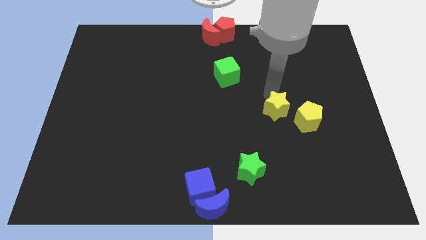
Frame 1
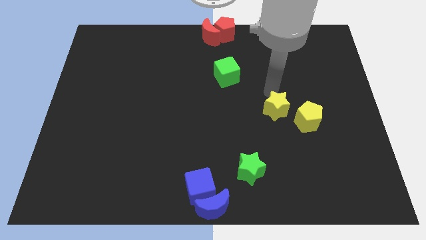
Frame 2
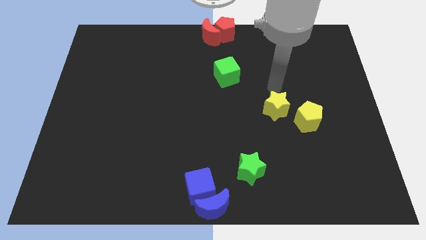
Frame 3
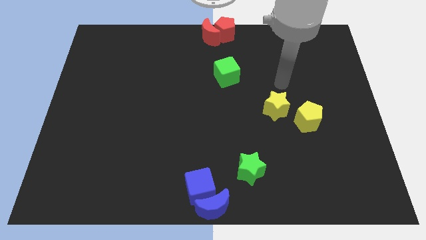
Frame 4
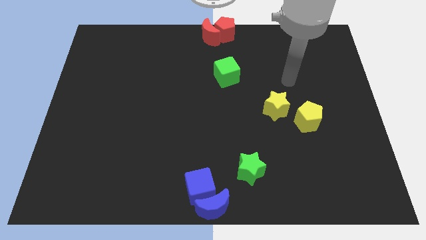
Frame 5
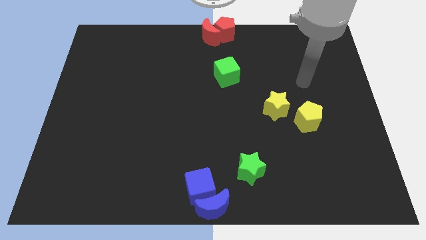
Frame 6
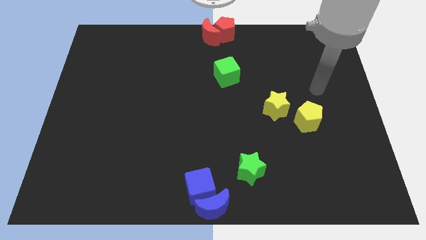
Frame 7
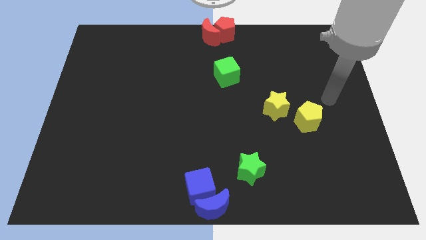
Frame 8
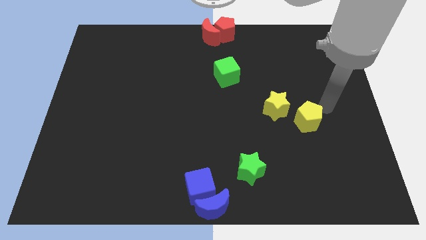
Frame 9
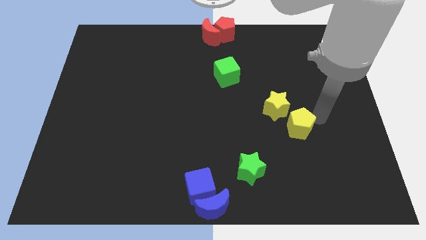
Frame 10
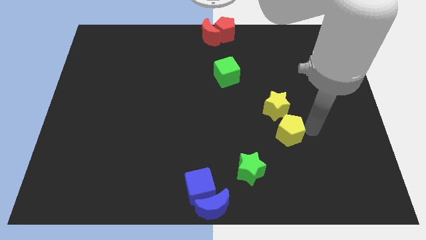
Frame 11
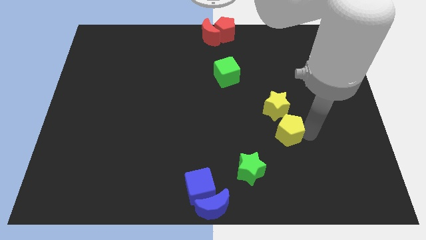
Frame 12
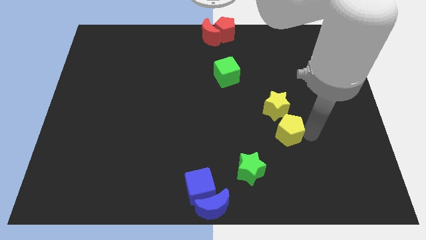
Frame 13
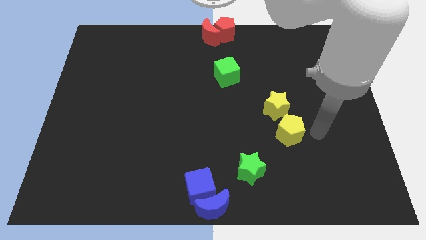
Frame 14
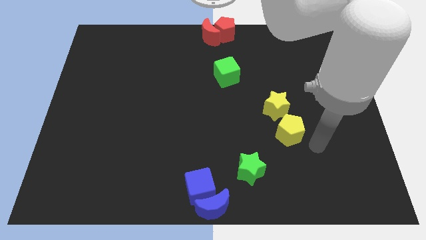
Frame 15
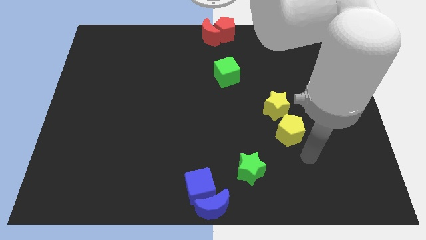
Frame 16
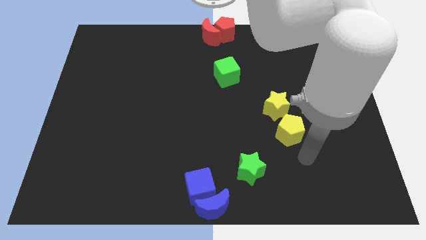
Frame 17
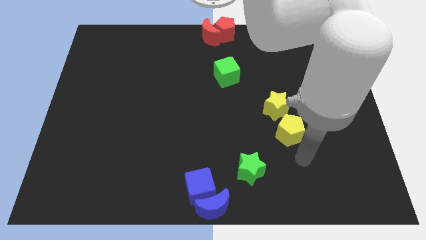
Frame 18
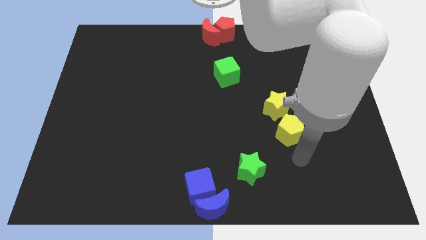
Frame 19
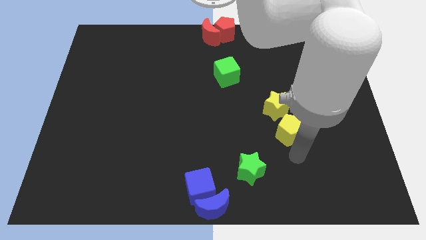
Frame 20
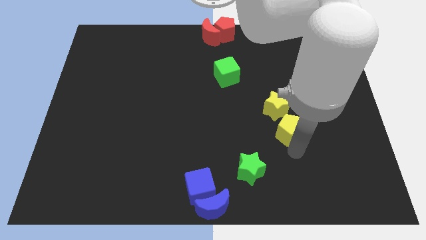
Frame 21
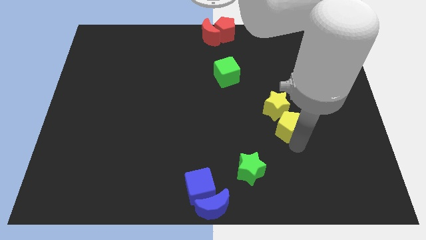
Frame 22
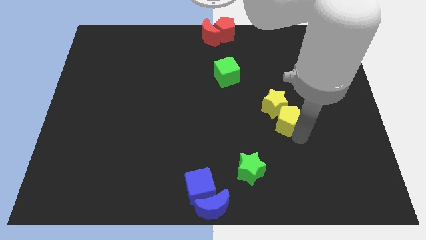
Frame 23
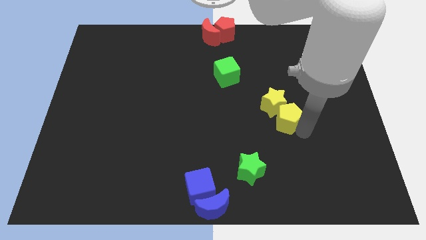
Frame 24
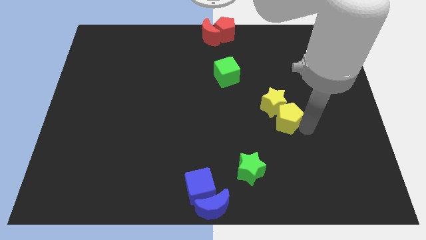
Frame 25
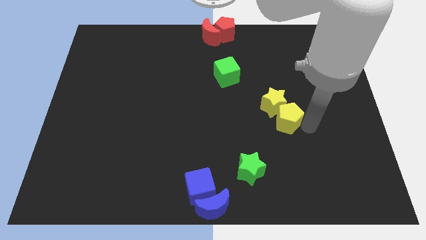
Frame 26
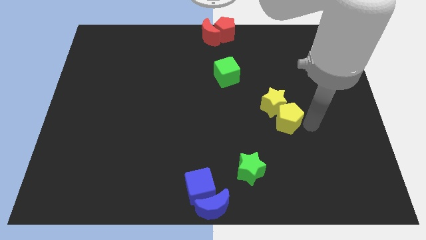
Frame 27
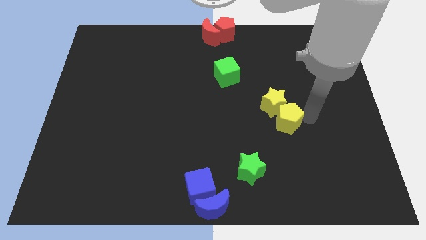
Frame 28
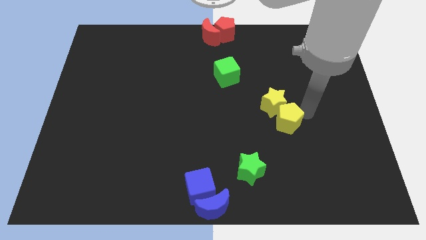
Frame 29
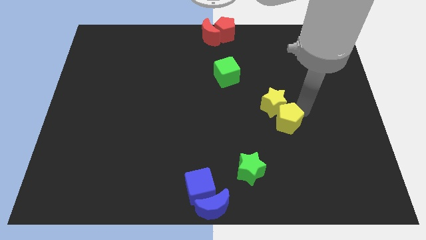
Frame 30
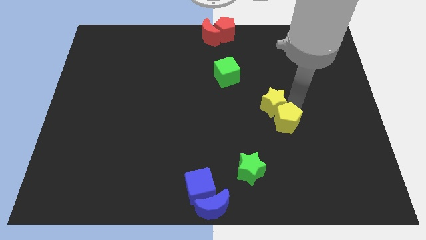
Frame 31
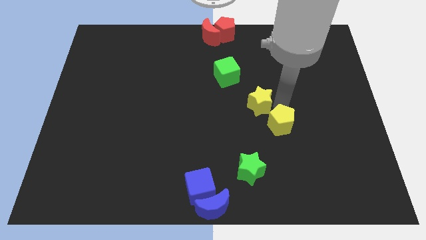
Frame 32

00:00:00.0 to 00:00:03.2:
put the yellow pentagon into the yellow star

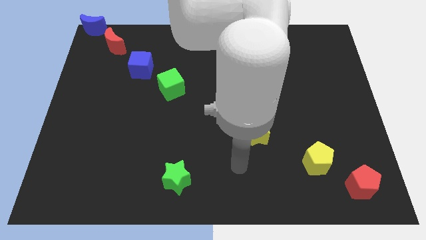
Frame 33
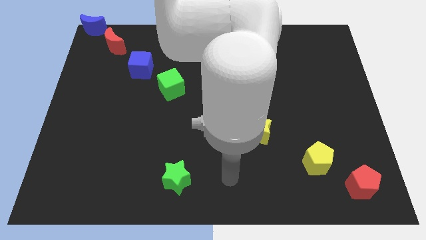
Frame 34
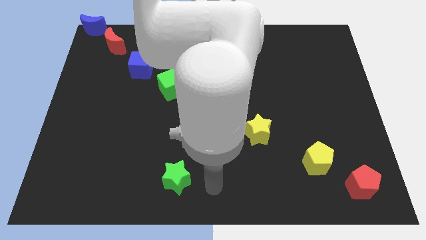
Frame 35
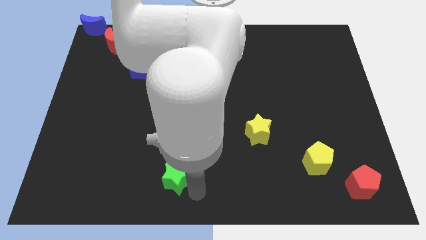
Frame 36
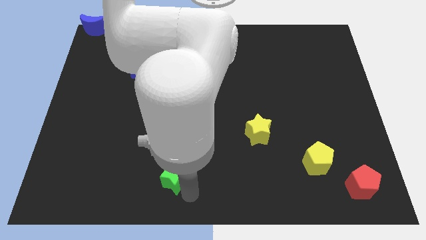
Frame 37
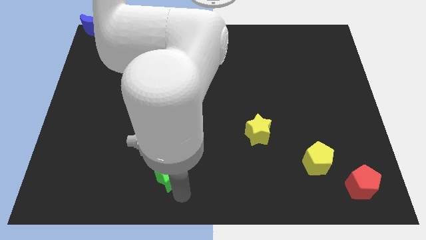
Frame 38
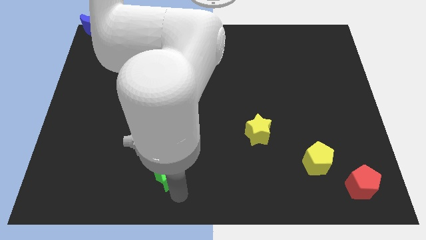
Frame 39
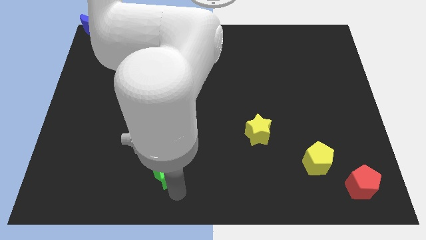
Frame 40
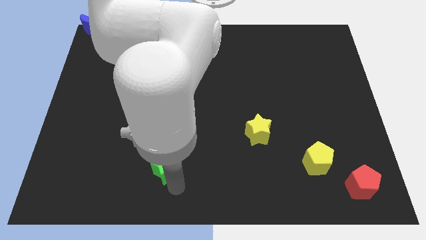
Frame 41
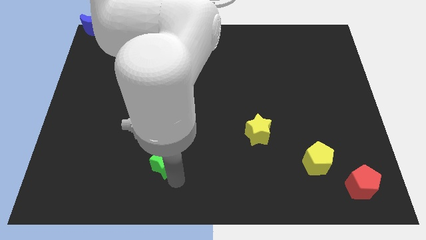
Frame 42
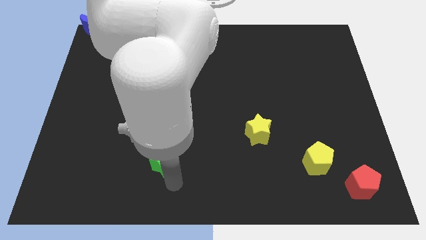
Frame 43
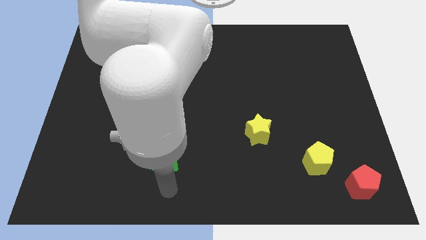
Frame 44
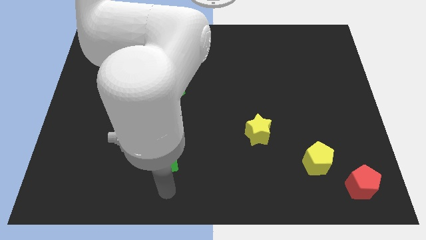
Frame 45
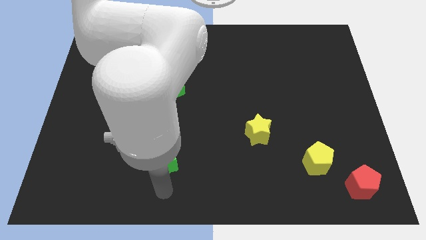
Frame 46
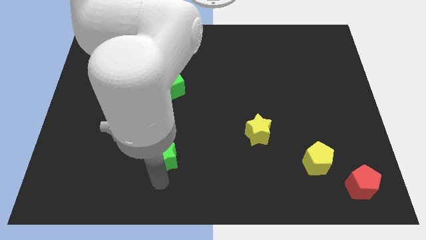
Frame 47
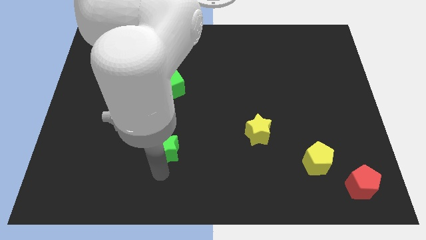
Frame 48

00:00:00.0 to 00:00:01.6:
move the green star to the center of the board

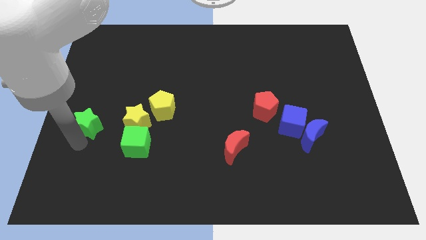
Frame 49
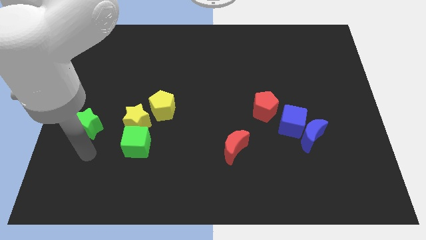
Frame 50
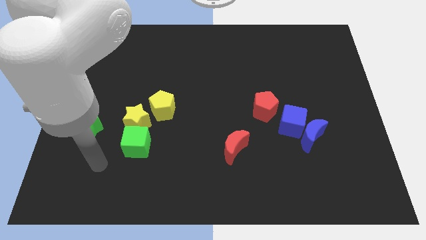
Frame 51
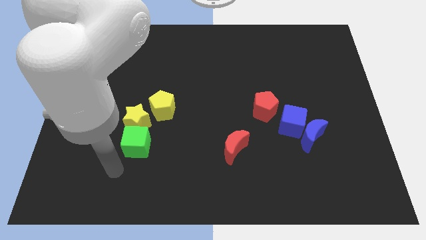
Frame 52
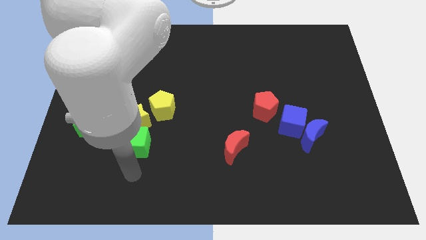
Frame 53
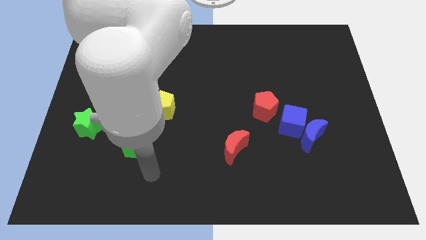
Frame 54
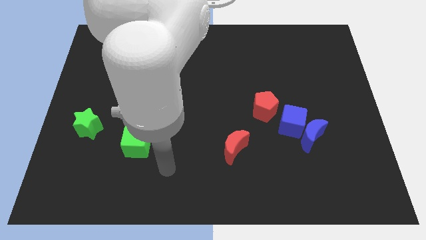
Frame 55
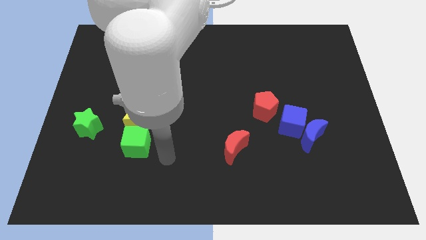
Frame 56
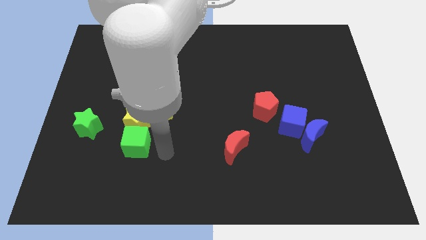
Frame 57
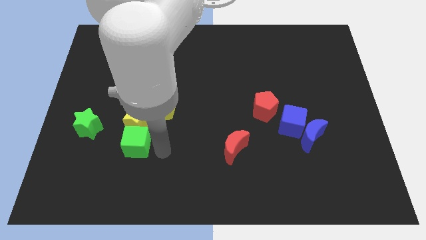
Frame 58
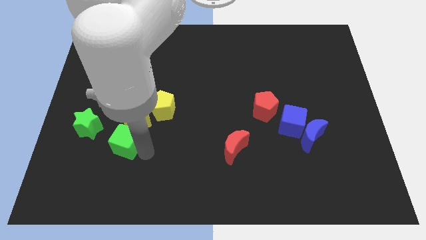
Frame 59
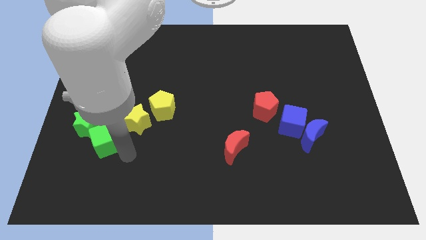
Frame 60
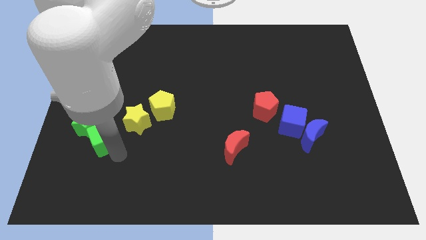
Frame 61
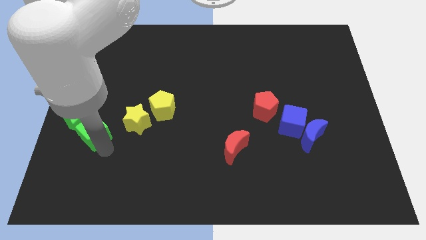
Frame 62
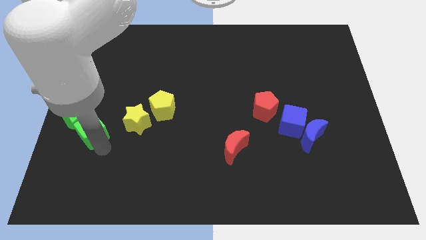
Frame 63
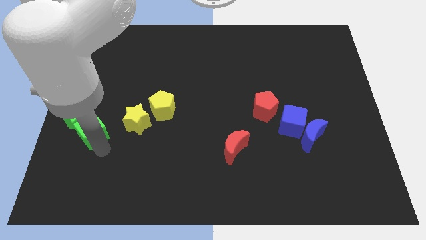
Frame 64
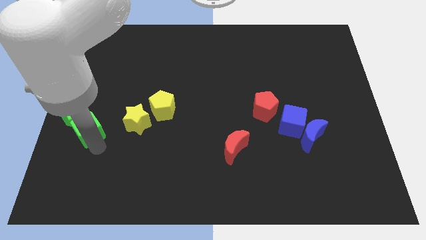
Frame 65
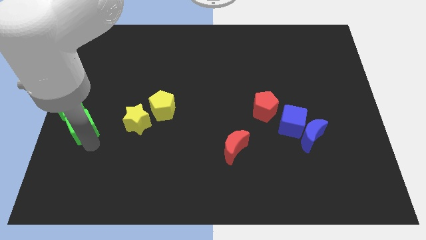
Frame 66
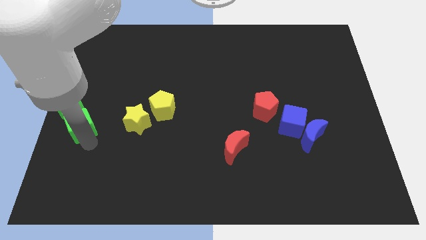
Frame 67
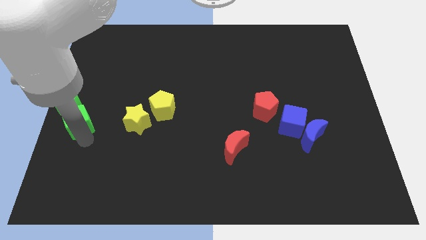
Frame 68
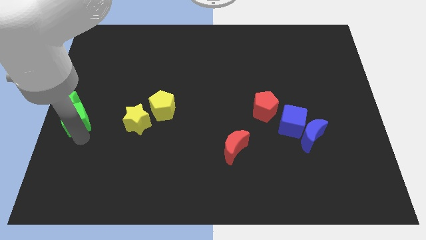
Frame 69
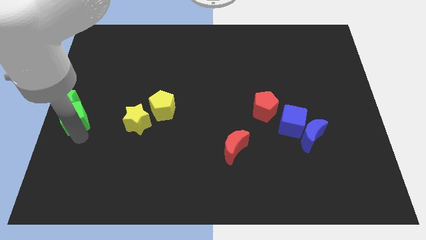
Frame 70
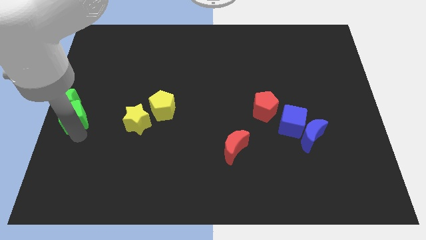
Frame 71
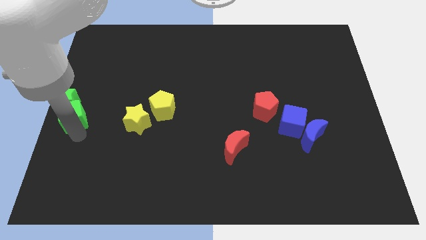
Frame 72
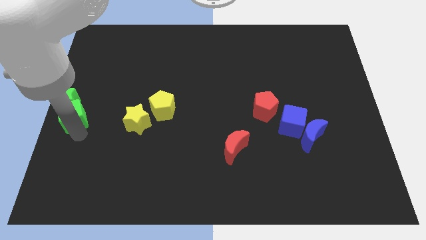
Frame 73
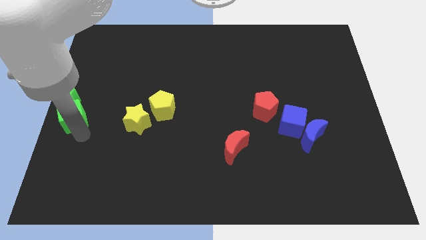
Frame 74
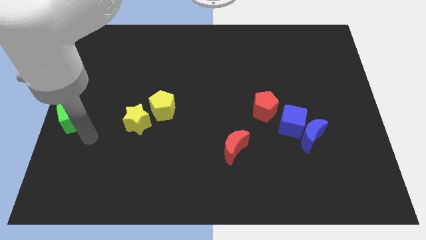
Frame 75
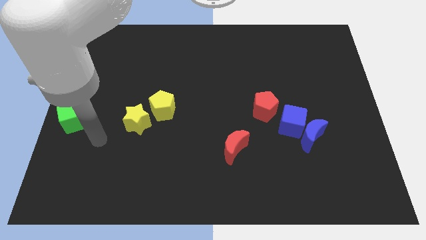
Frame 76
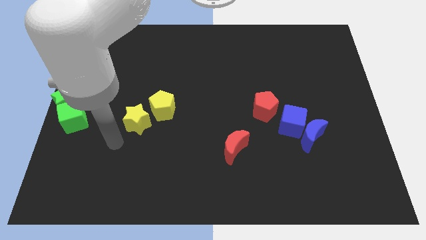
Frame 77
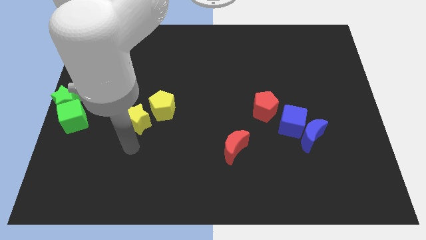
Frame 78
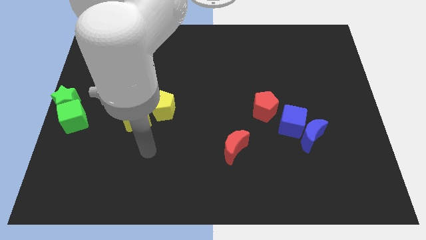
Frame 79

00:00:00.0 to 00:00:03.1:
push green cube and green star to the center left of the board

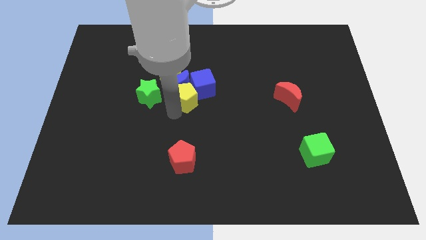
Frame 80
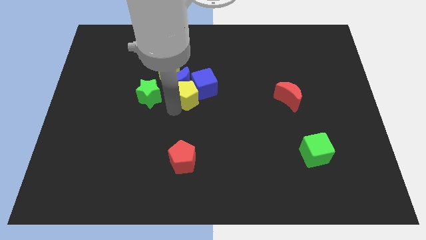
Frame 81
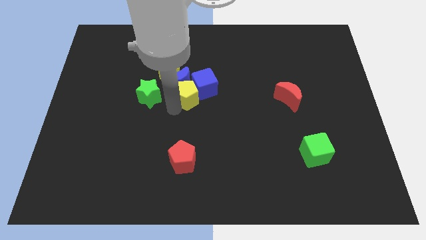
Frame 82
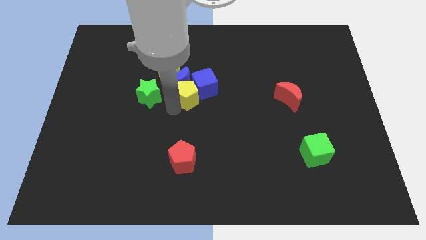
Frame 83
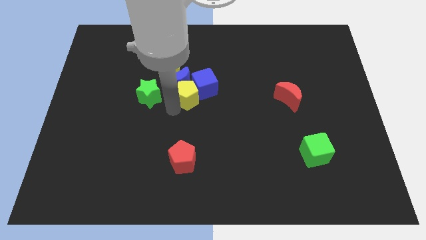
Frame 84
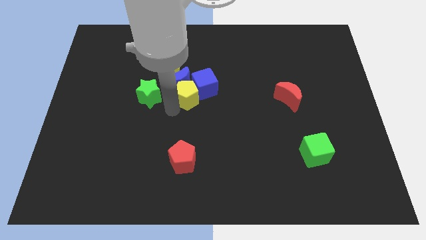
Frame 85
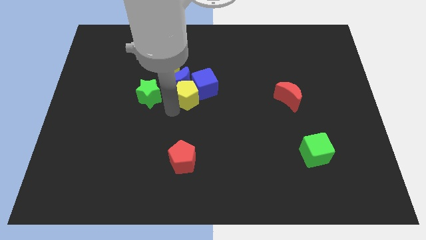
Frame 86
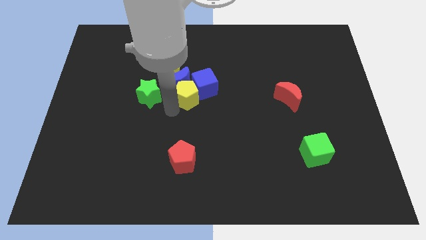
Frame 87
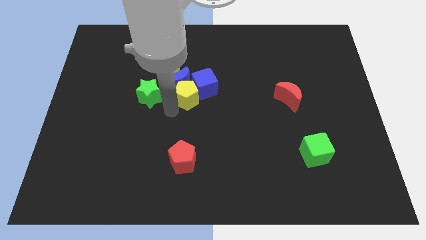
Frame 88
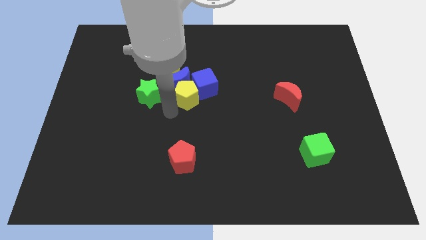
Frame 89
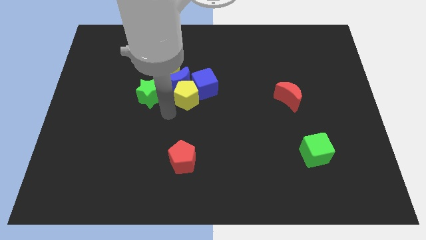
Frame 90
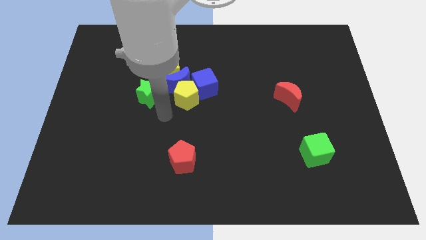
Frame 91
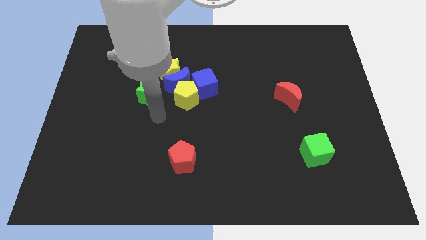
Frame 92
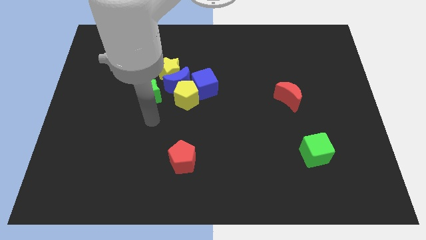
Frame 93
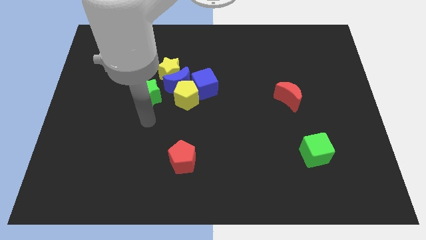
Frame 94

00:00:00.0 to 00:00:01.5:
push yellow pentagon slightly towards top of the board
